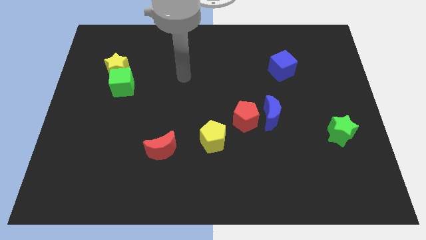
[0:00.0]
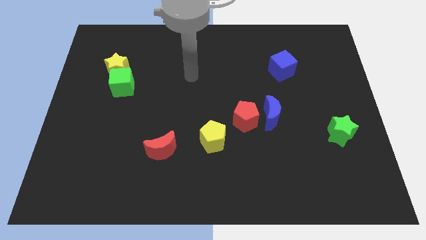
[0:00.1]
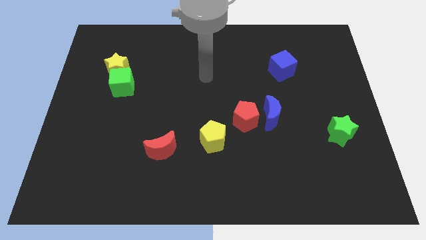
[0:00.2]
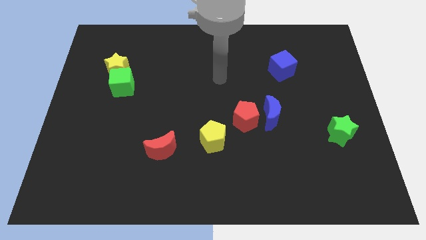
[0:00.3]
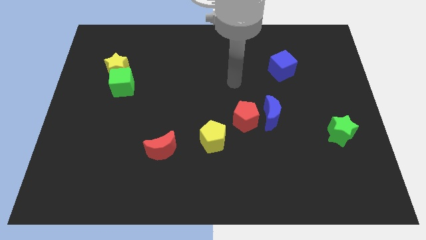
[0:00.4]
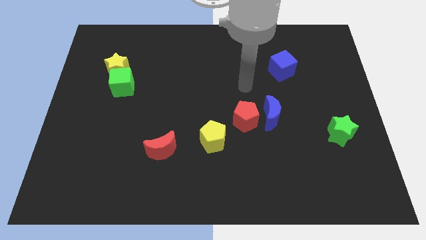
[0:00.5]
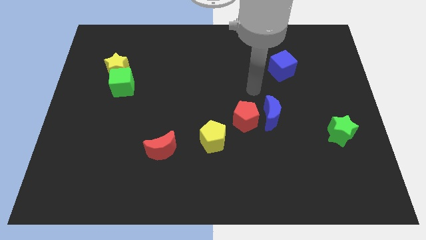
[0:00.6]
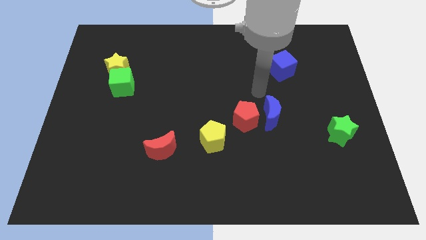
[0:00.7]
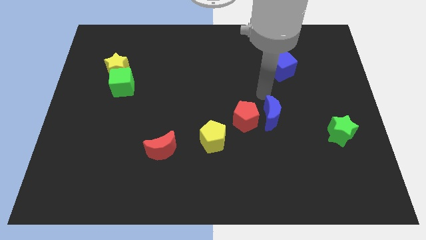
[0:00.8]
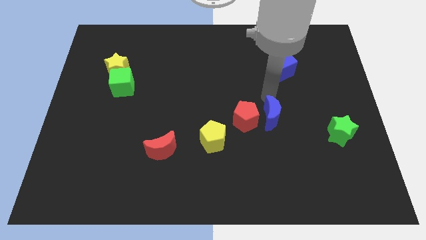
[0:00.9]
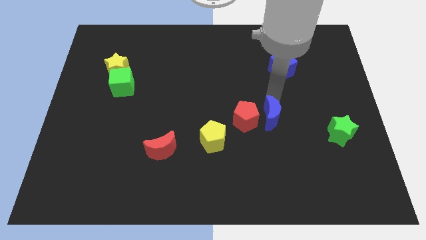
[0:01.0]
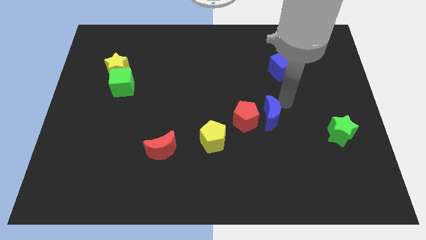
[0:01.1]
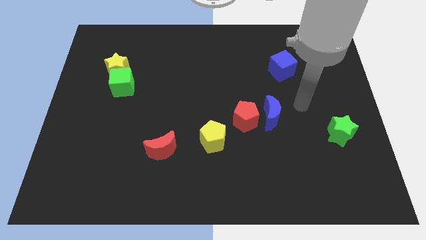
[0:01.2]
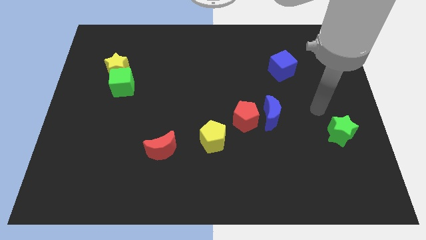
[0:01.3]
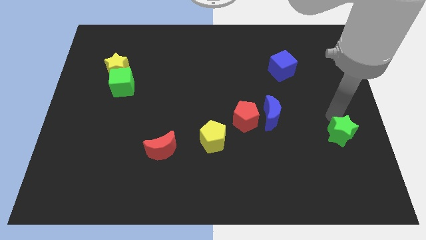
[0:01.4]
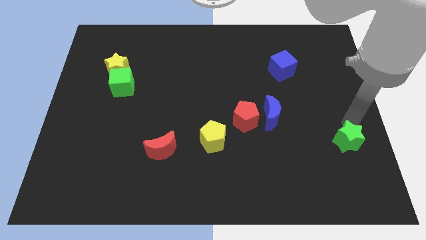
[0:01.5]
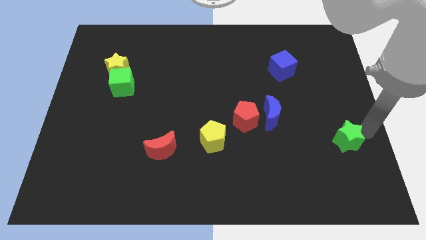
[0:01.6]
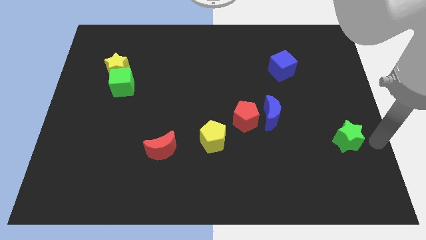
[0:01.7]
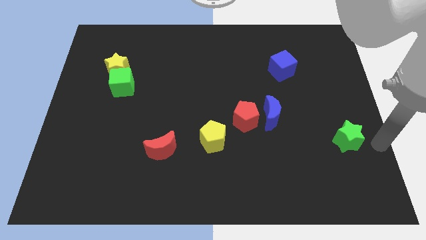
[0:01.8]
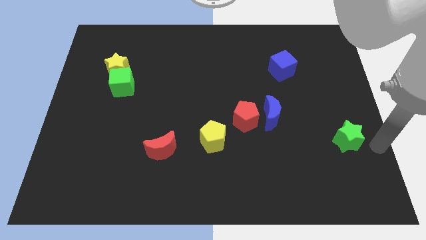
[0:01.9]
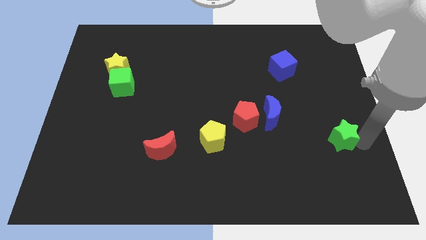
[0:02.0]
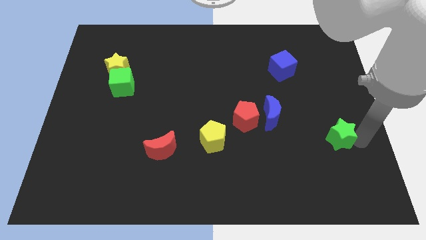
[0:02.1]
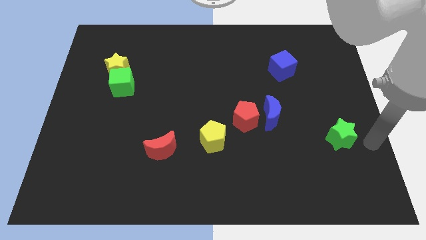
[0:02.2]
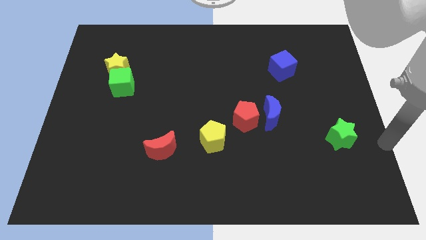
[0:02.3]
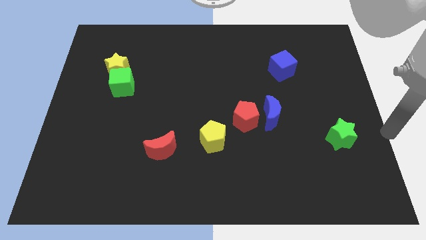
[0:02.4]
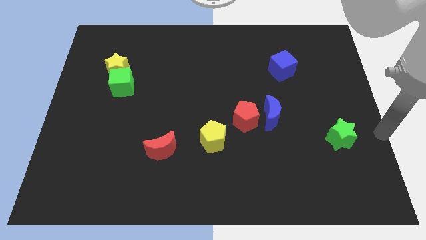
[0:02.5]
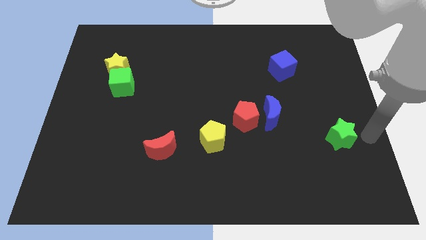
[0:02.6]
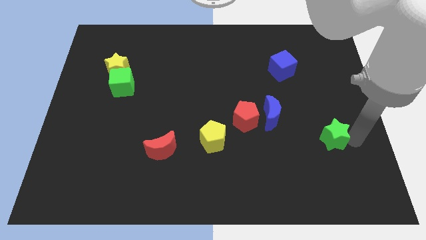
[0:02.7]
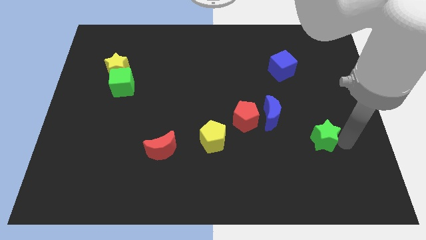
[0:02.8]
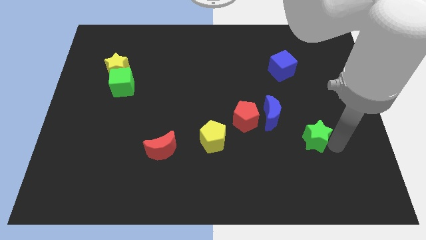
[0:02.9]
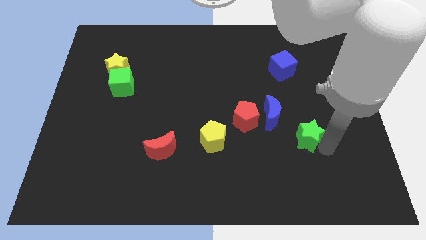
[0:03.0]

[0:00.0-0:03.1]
drag the green star towards the right side of the blue crescent

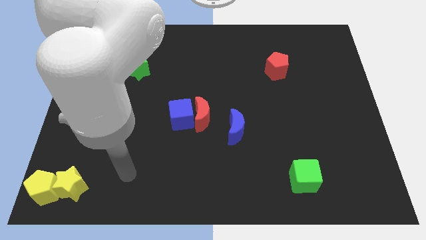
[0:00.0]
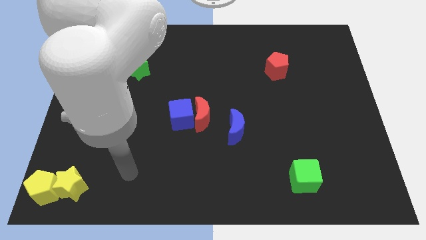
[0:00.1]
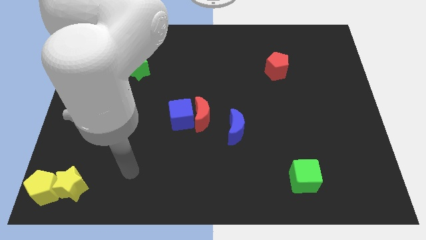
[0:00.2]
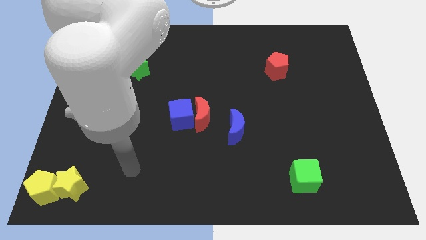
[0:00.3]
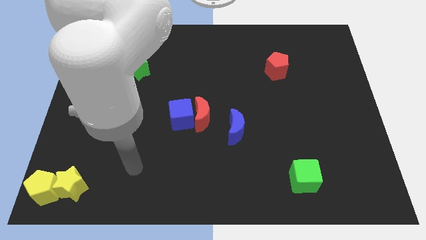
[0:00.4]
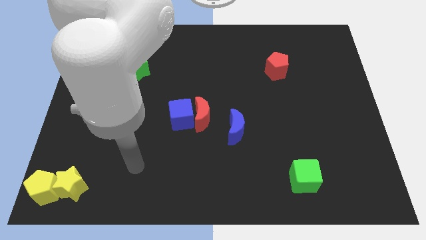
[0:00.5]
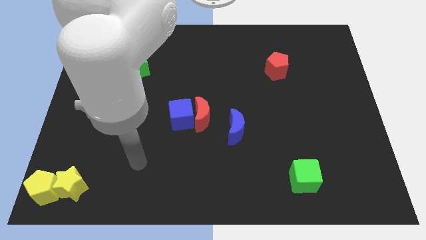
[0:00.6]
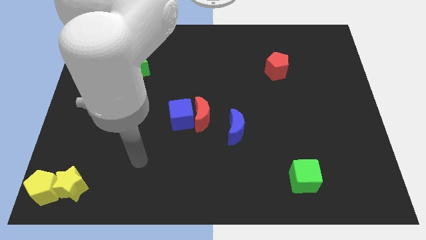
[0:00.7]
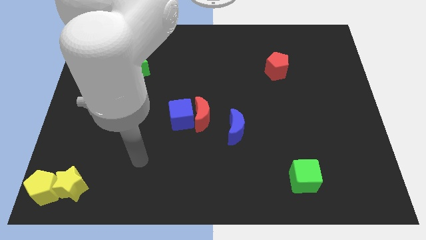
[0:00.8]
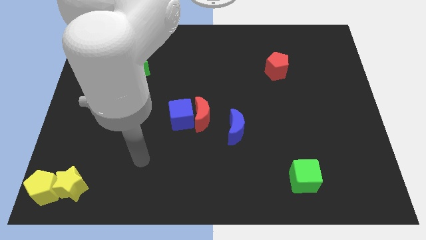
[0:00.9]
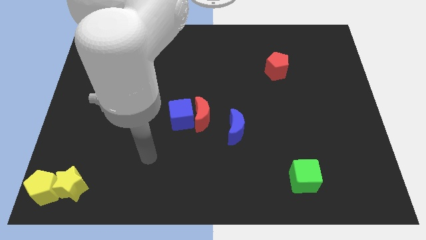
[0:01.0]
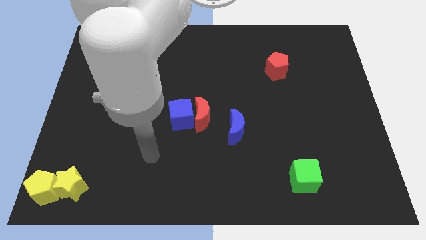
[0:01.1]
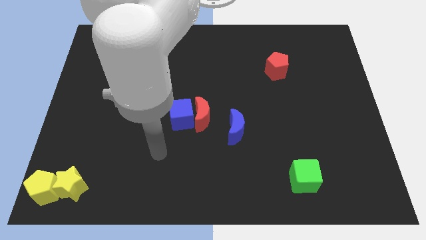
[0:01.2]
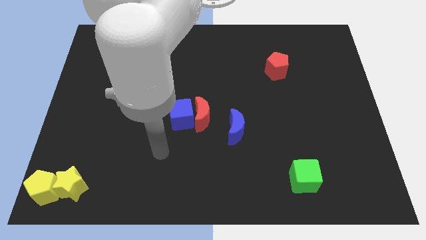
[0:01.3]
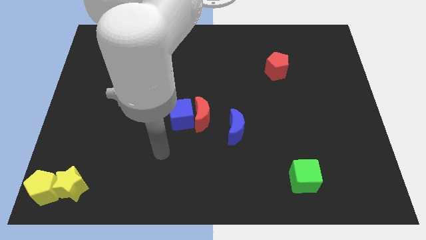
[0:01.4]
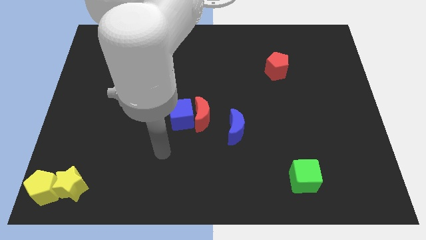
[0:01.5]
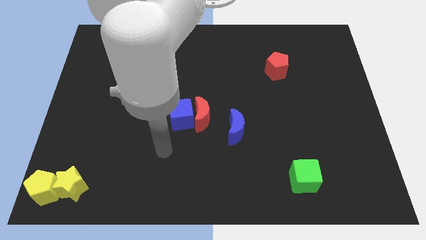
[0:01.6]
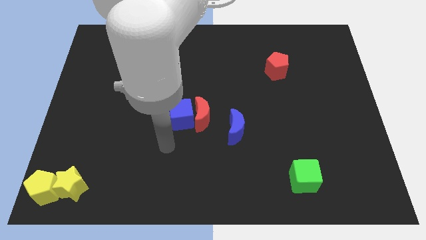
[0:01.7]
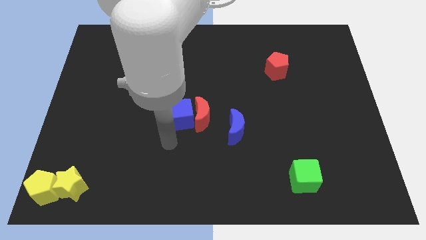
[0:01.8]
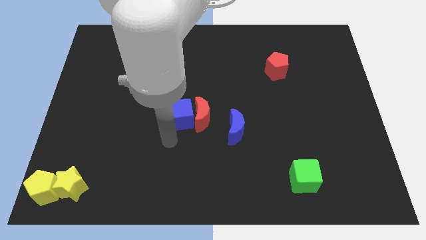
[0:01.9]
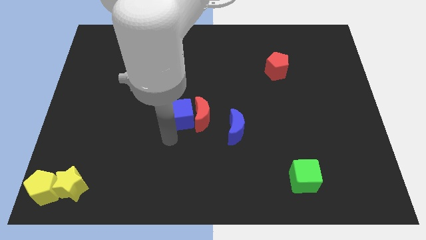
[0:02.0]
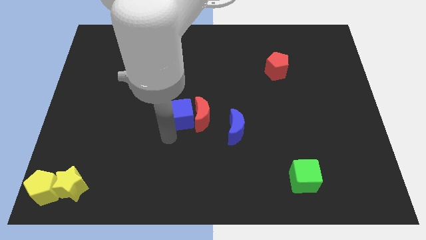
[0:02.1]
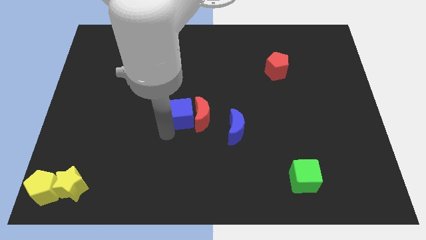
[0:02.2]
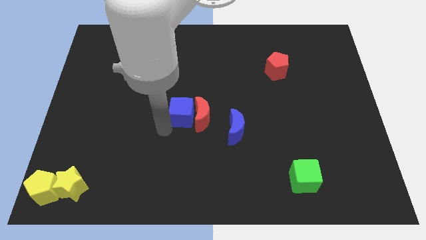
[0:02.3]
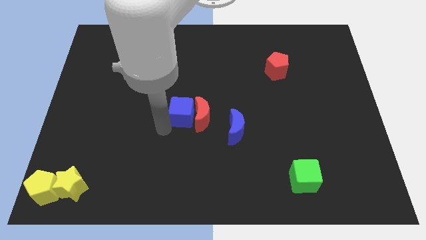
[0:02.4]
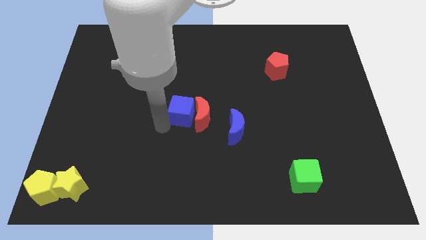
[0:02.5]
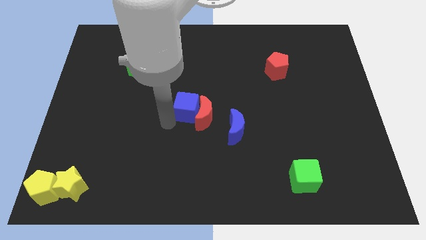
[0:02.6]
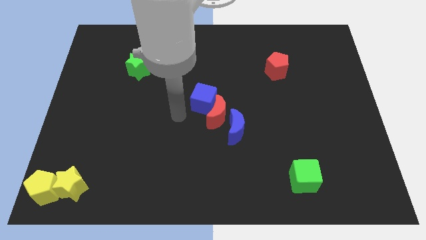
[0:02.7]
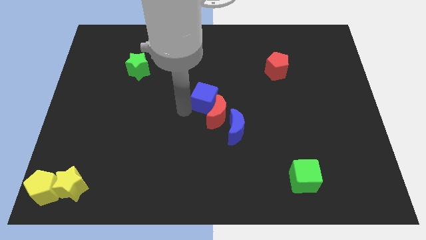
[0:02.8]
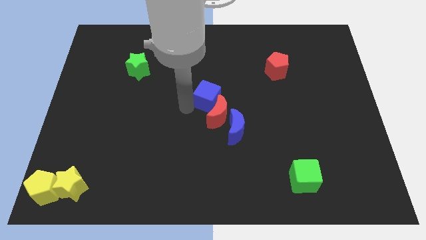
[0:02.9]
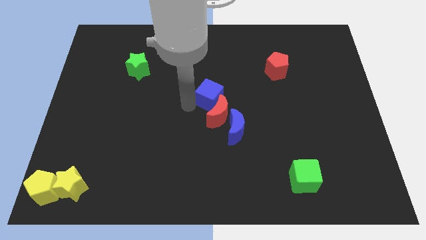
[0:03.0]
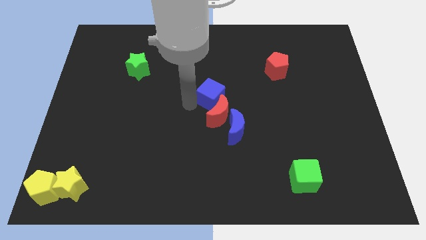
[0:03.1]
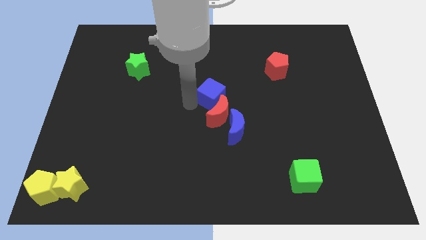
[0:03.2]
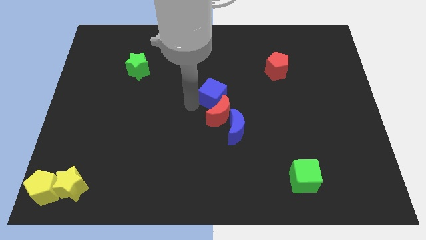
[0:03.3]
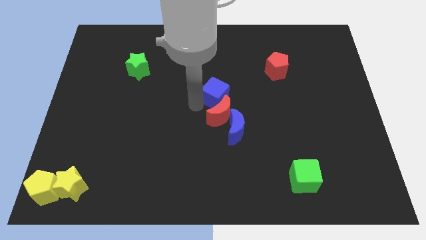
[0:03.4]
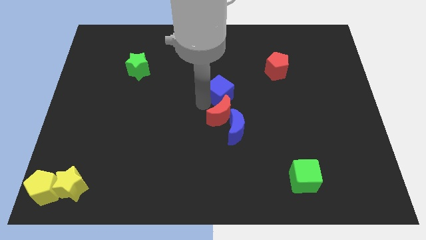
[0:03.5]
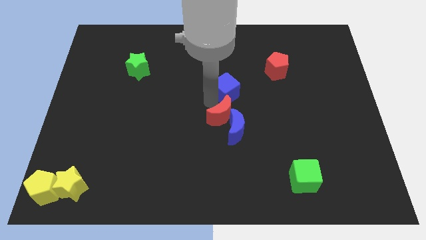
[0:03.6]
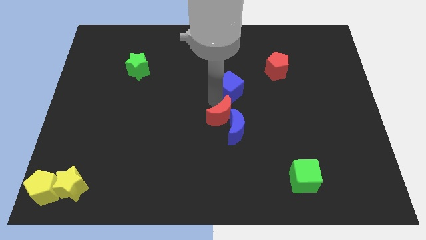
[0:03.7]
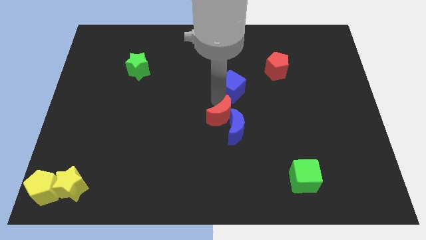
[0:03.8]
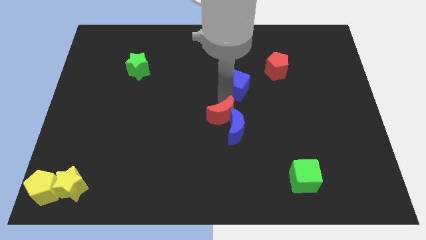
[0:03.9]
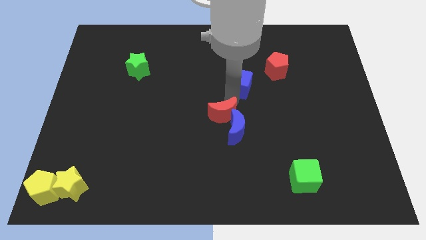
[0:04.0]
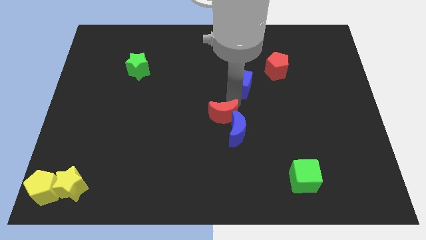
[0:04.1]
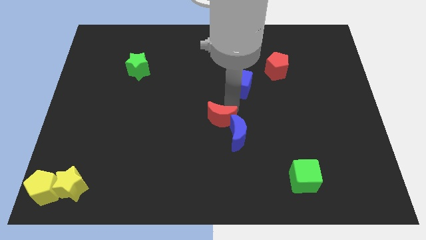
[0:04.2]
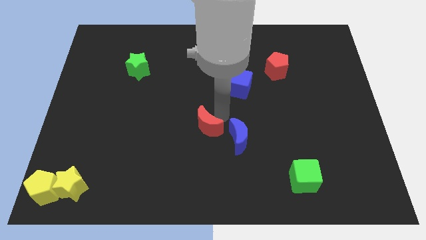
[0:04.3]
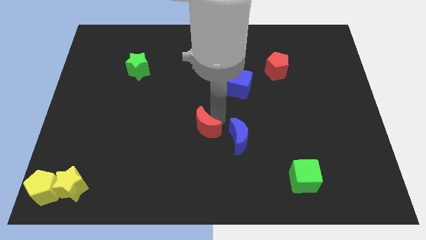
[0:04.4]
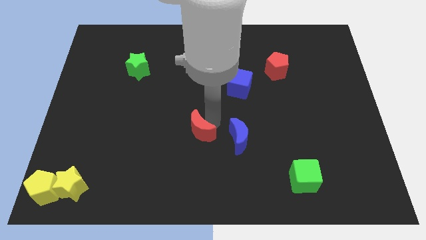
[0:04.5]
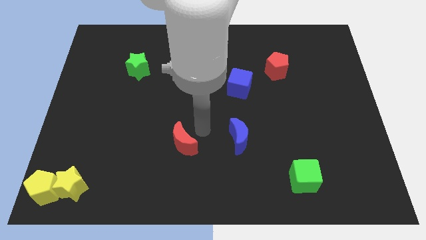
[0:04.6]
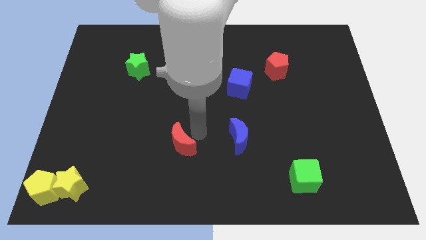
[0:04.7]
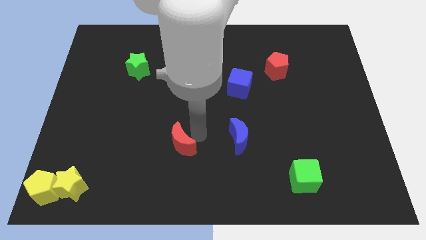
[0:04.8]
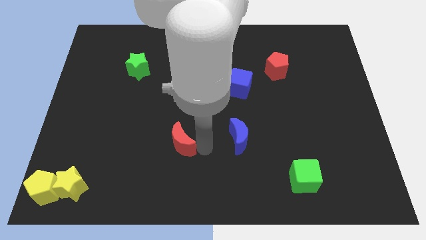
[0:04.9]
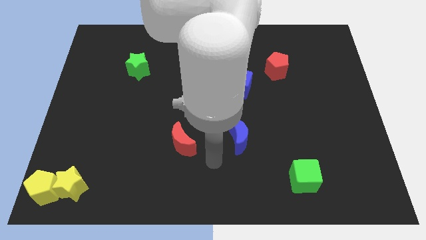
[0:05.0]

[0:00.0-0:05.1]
separate the crescents and the blue cube

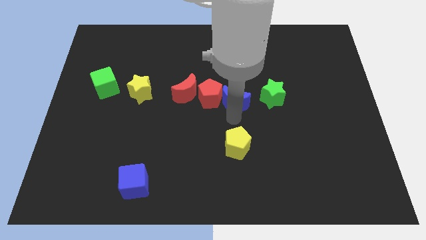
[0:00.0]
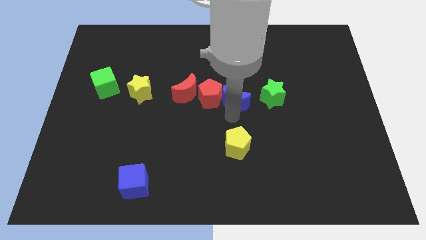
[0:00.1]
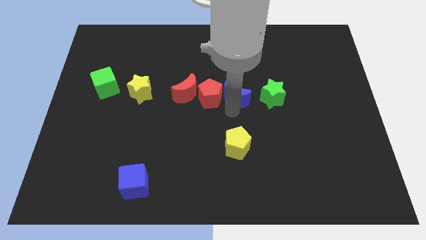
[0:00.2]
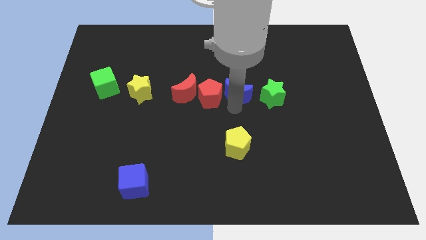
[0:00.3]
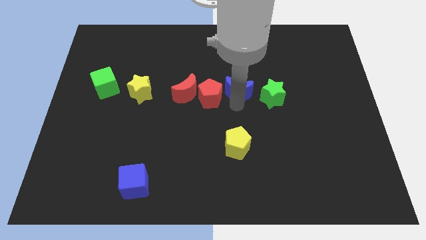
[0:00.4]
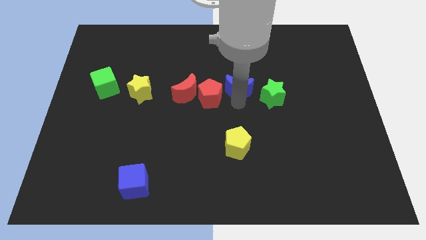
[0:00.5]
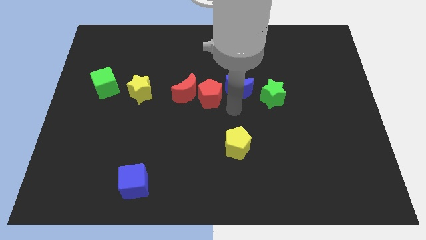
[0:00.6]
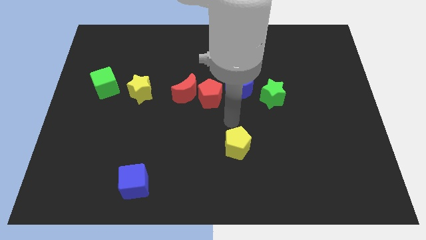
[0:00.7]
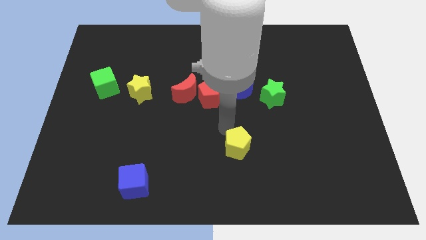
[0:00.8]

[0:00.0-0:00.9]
separate the blue crescent from red pentagon
